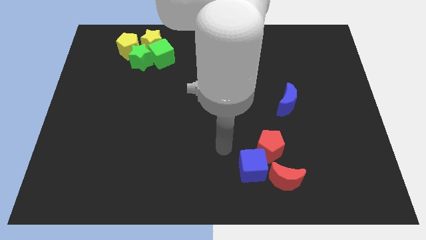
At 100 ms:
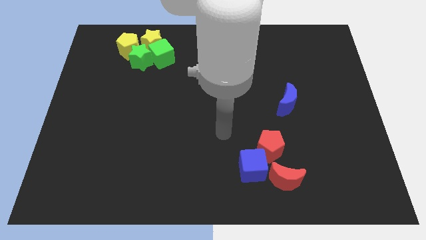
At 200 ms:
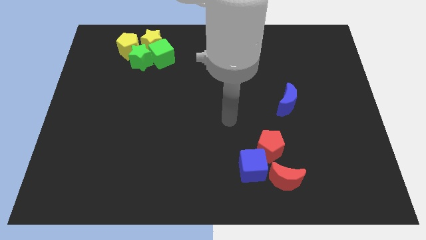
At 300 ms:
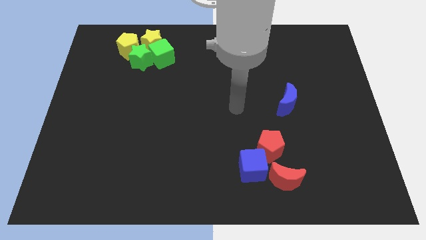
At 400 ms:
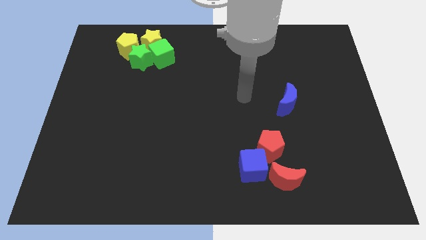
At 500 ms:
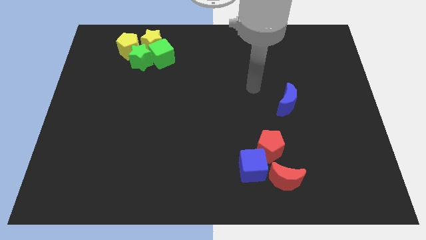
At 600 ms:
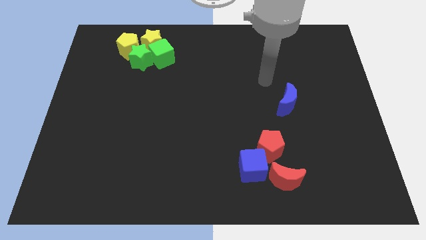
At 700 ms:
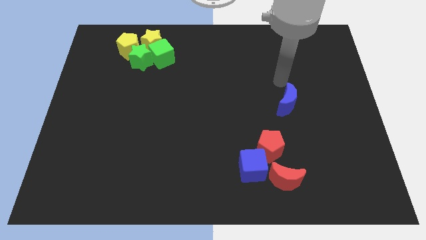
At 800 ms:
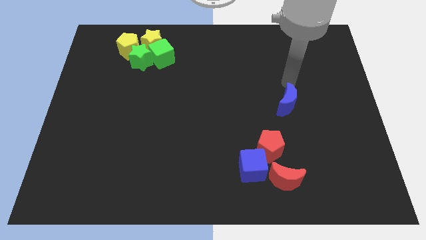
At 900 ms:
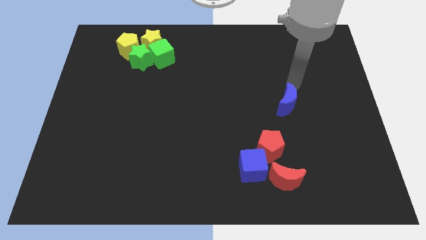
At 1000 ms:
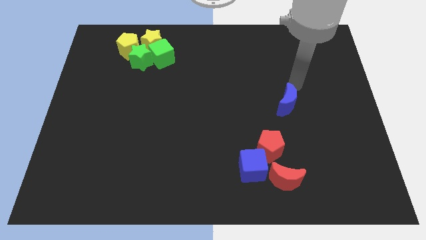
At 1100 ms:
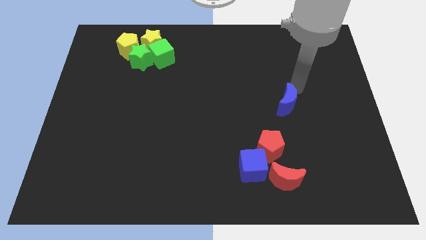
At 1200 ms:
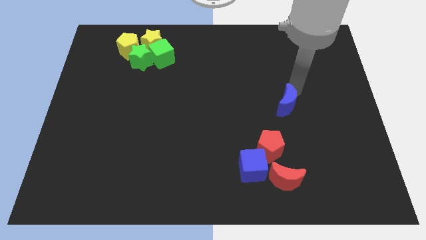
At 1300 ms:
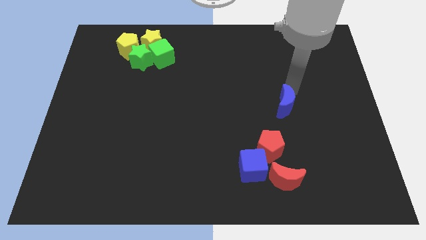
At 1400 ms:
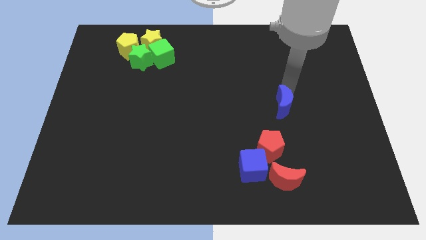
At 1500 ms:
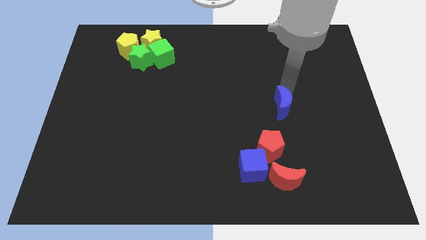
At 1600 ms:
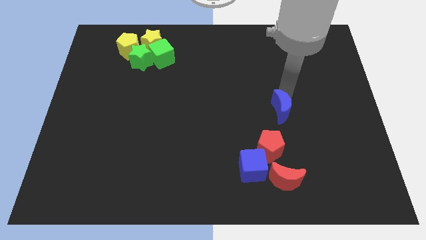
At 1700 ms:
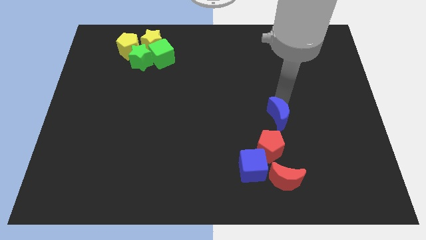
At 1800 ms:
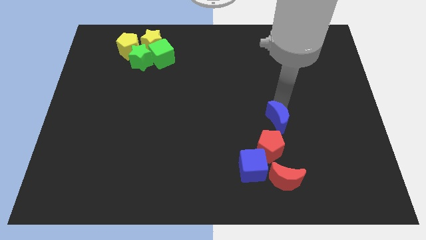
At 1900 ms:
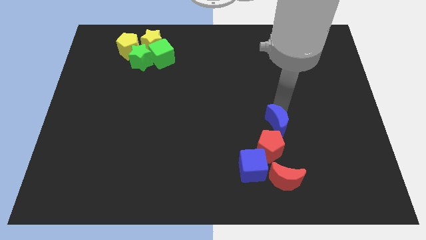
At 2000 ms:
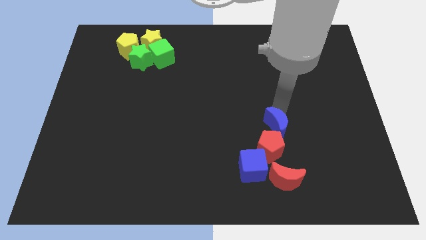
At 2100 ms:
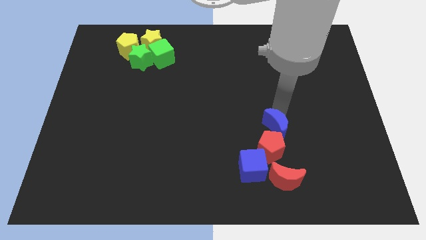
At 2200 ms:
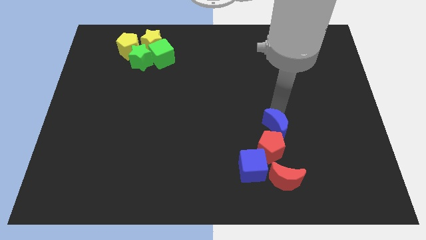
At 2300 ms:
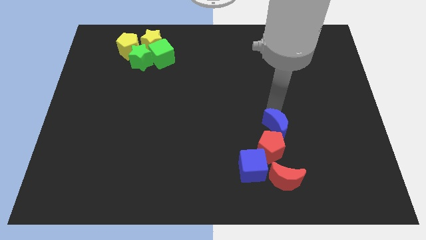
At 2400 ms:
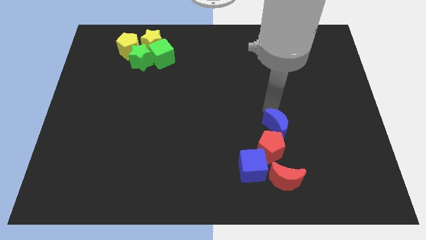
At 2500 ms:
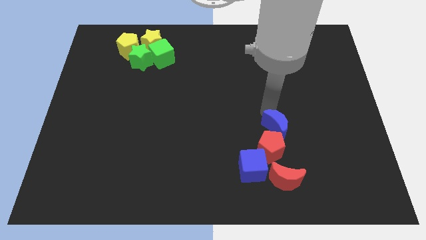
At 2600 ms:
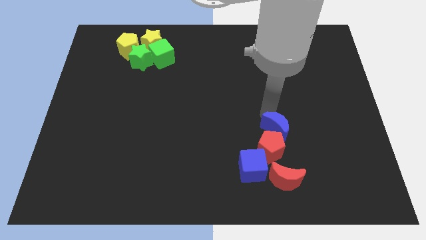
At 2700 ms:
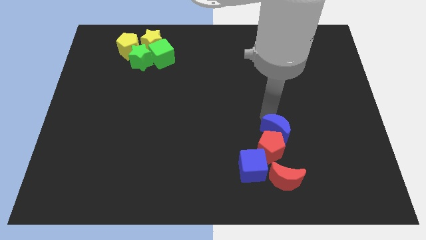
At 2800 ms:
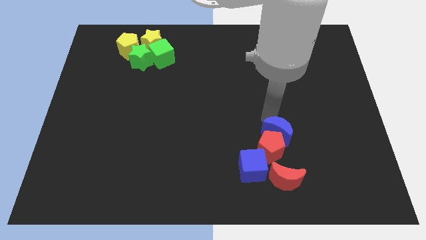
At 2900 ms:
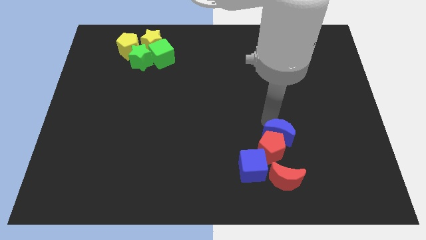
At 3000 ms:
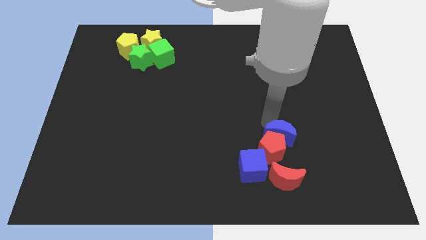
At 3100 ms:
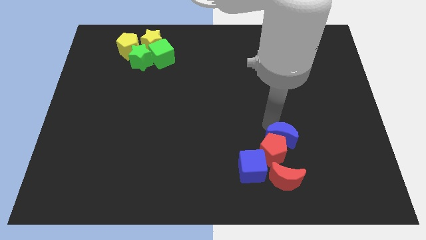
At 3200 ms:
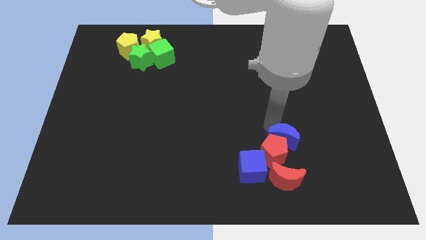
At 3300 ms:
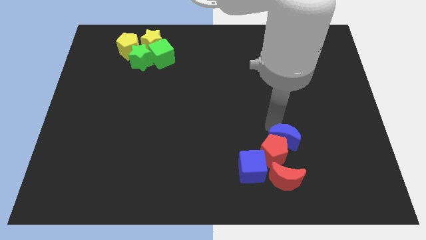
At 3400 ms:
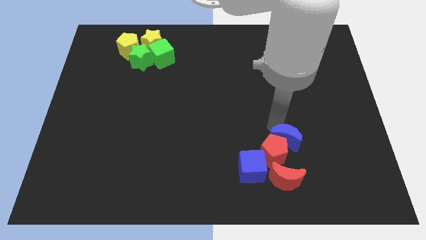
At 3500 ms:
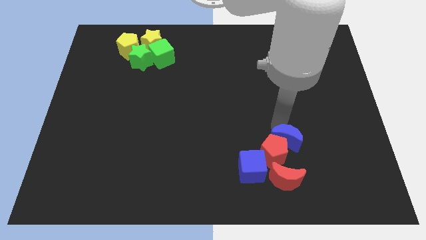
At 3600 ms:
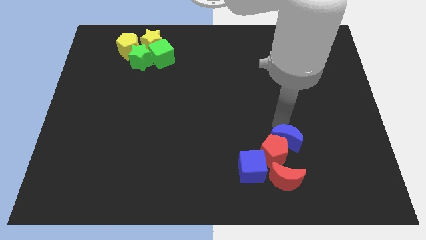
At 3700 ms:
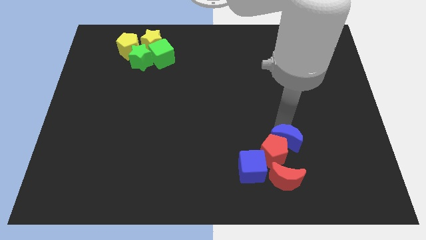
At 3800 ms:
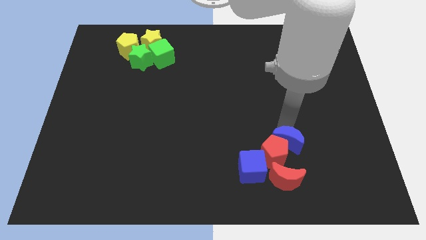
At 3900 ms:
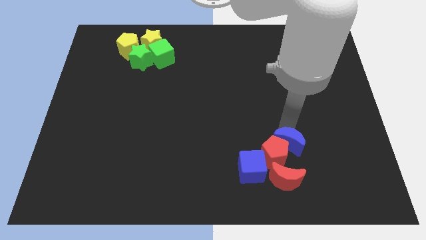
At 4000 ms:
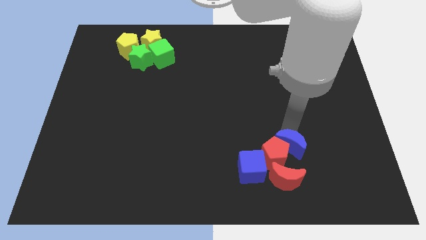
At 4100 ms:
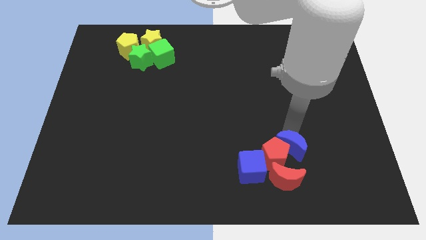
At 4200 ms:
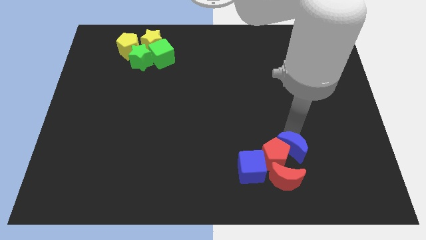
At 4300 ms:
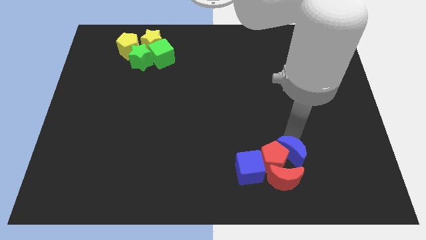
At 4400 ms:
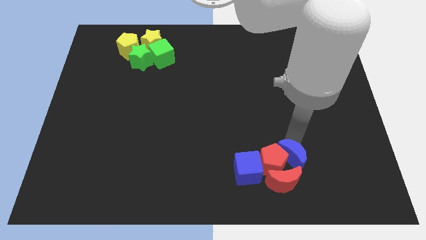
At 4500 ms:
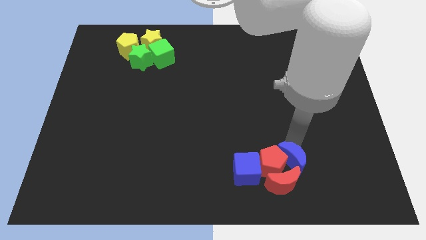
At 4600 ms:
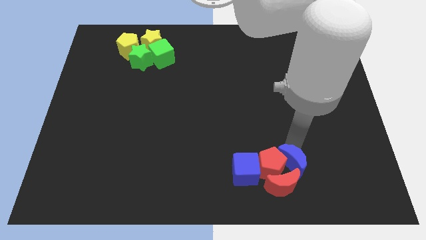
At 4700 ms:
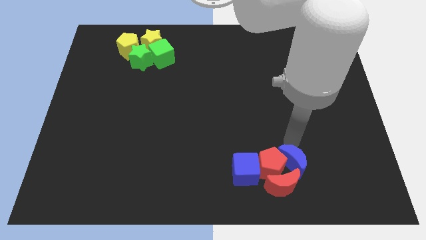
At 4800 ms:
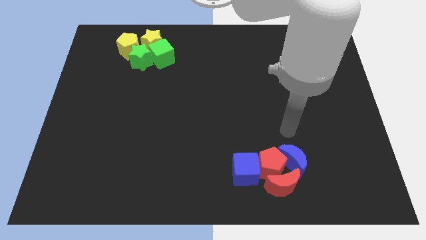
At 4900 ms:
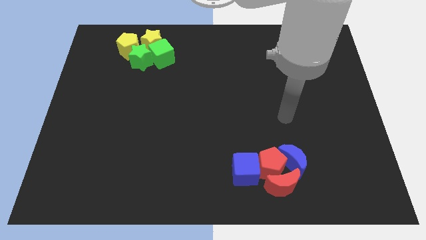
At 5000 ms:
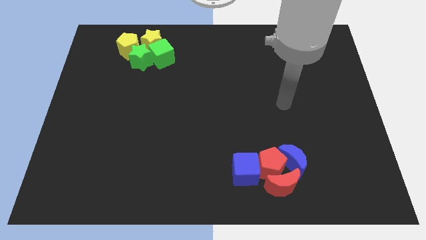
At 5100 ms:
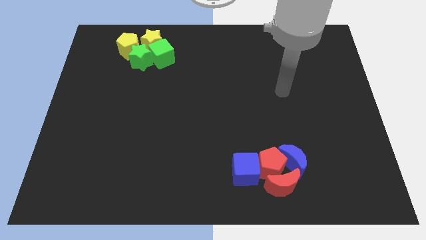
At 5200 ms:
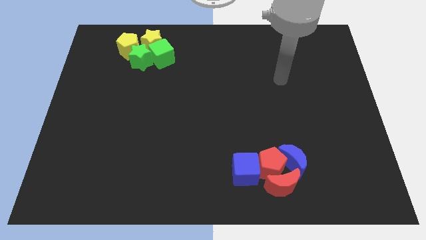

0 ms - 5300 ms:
place the blue crescent to the right of the red blocks

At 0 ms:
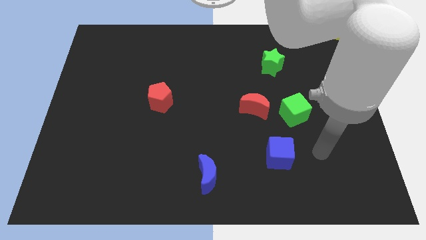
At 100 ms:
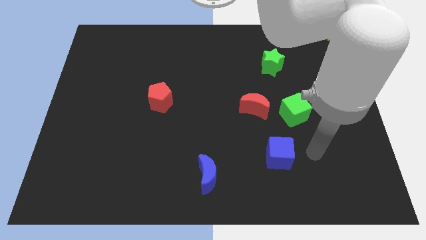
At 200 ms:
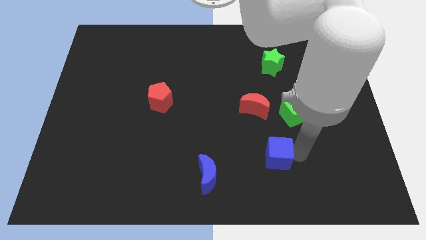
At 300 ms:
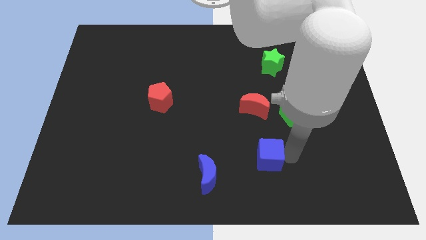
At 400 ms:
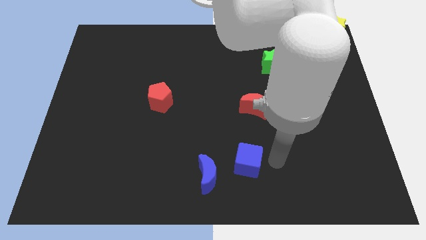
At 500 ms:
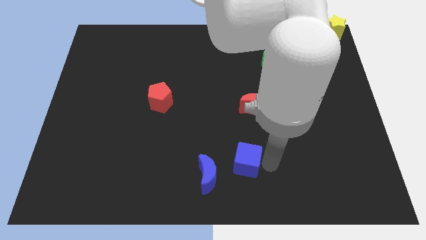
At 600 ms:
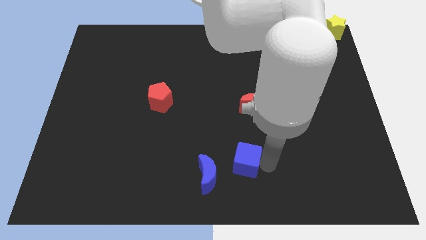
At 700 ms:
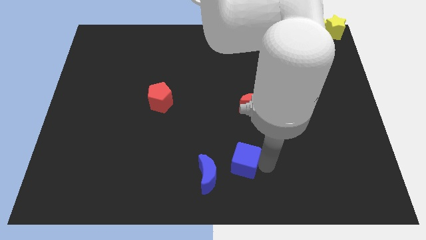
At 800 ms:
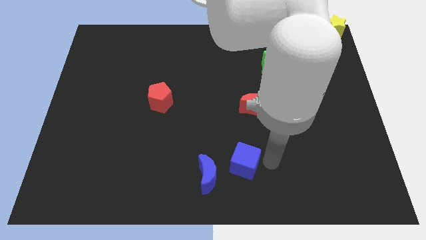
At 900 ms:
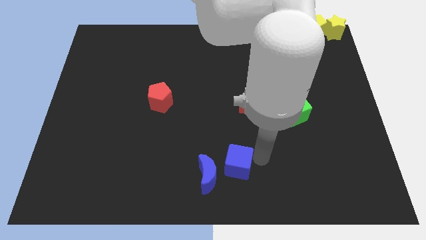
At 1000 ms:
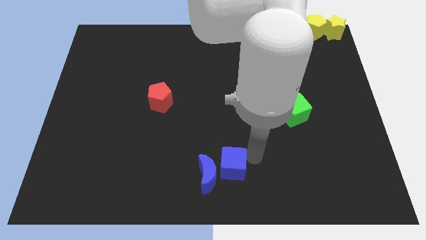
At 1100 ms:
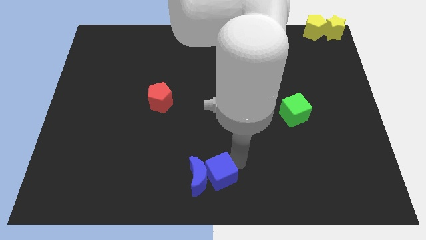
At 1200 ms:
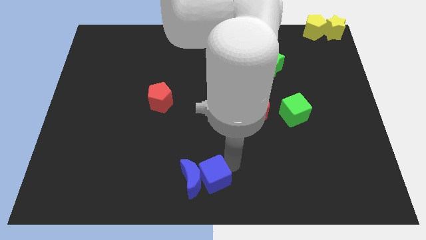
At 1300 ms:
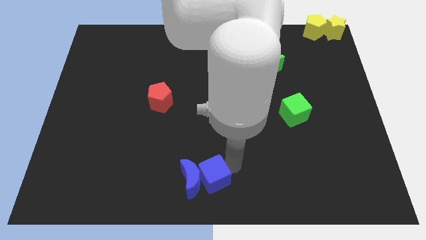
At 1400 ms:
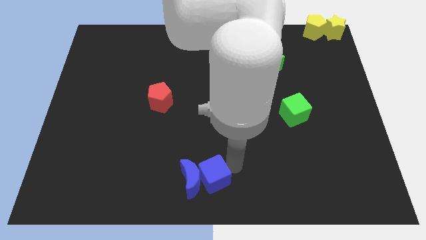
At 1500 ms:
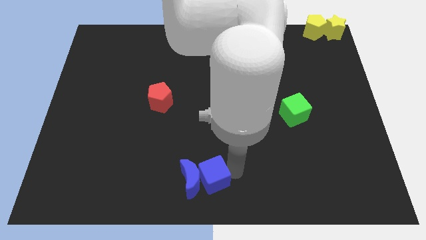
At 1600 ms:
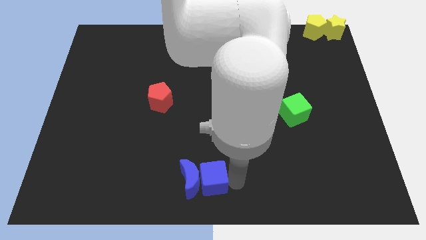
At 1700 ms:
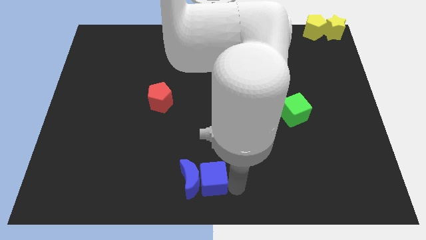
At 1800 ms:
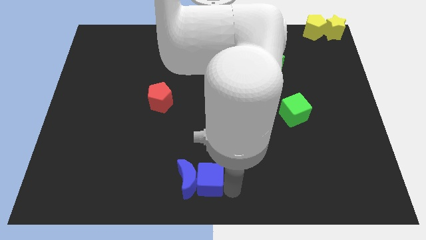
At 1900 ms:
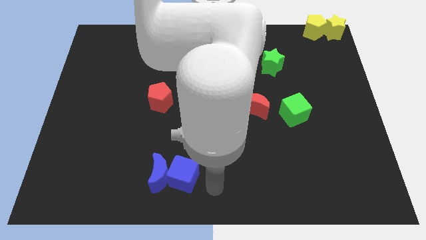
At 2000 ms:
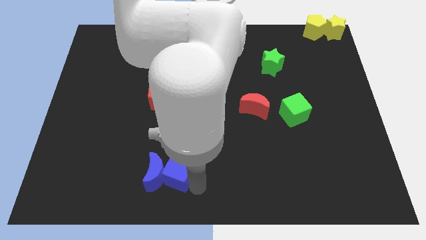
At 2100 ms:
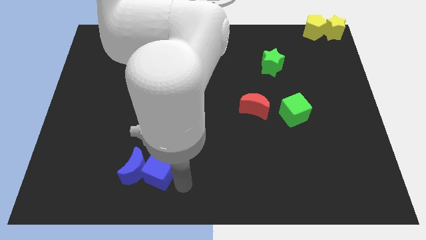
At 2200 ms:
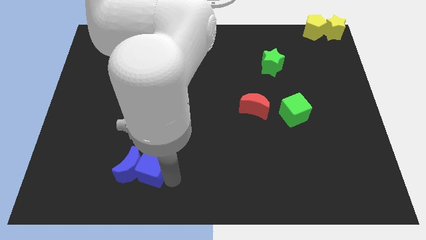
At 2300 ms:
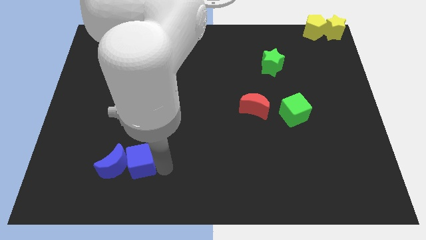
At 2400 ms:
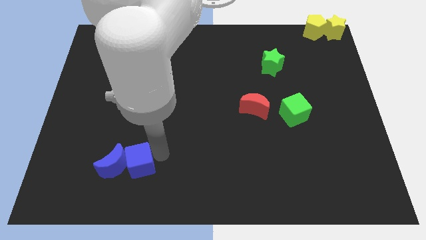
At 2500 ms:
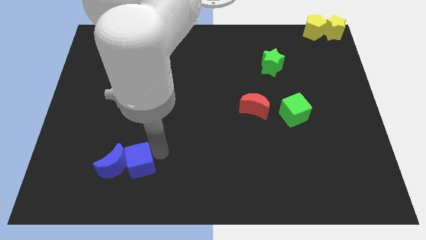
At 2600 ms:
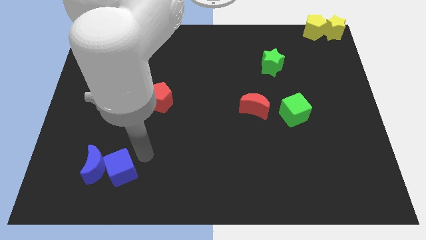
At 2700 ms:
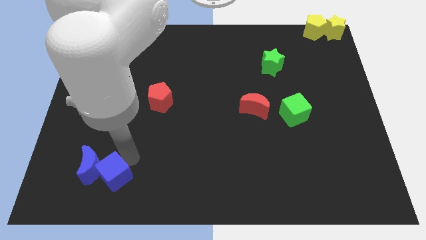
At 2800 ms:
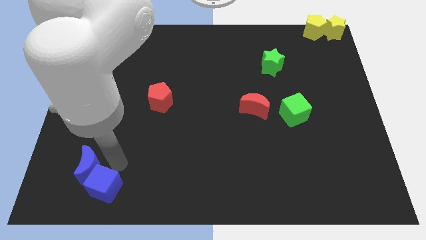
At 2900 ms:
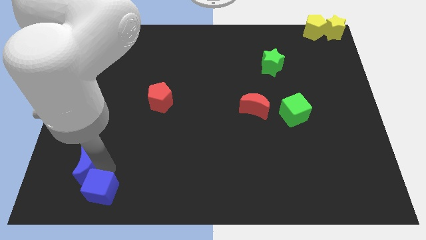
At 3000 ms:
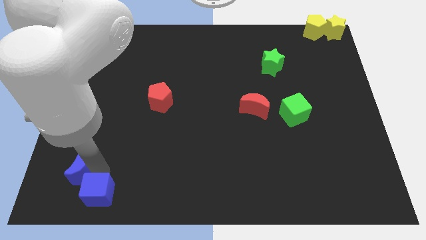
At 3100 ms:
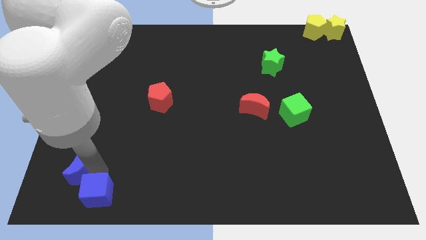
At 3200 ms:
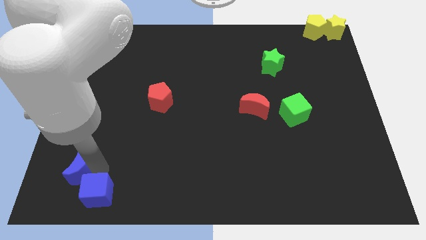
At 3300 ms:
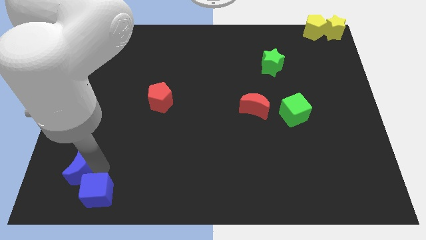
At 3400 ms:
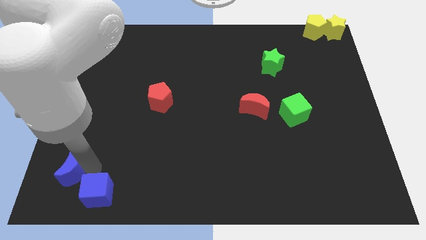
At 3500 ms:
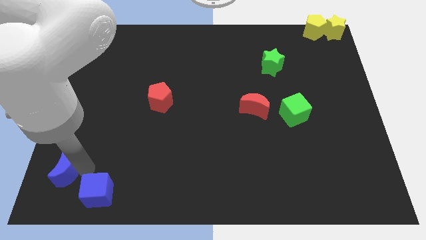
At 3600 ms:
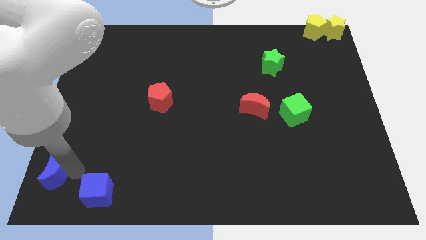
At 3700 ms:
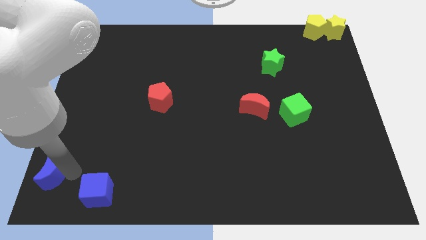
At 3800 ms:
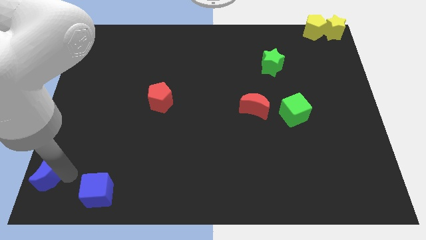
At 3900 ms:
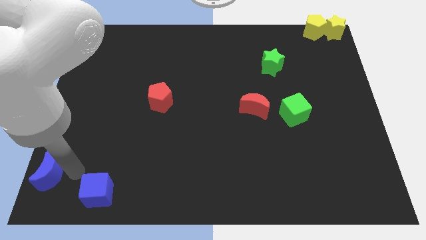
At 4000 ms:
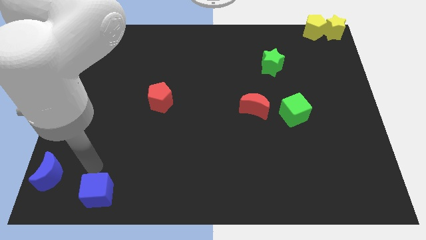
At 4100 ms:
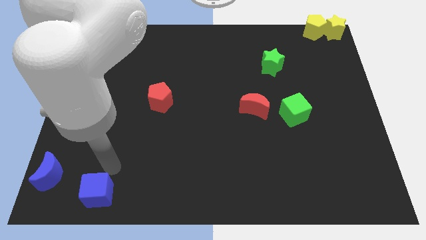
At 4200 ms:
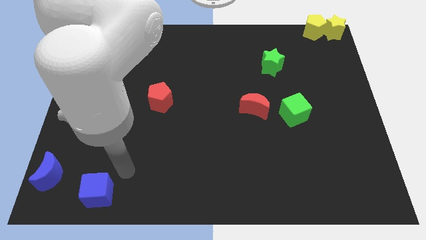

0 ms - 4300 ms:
move blue cube towards the bottom left corner of the board
